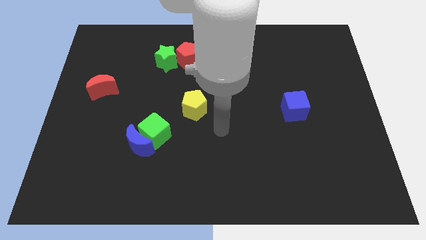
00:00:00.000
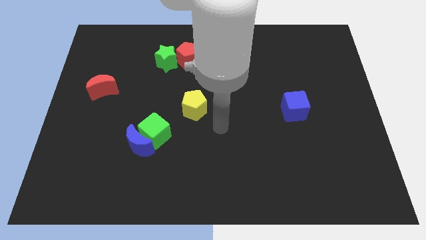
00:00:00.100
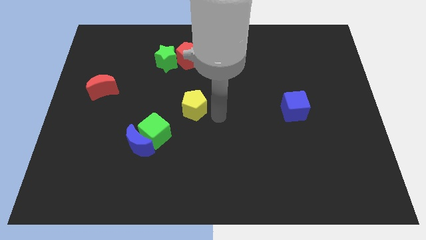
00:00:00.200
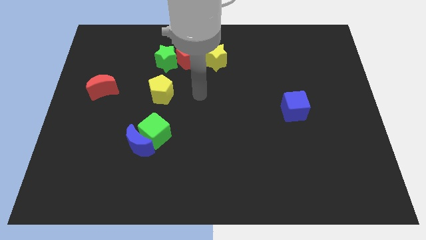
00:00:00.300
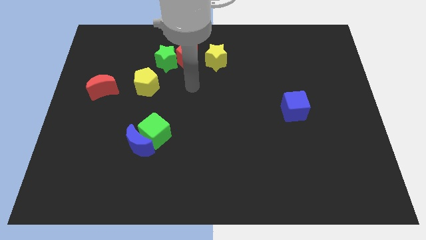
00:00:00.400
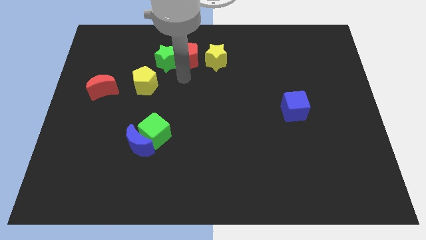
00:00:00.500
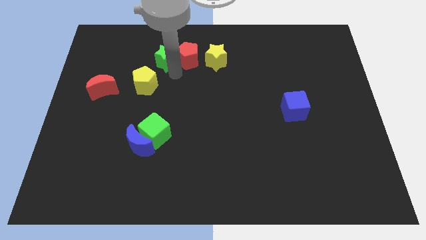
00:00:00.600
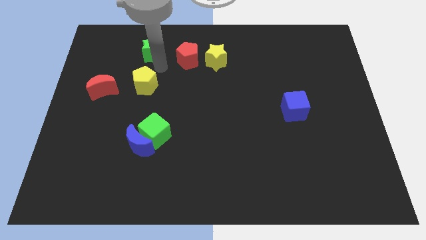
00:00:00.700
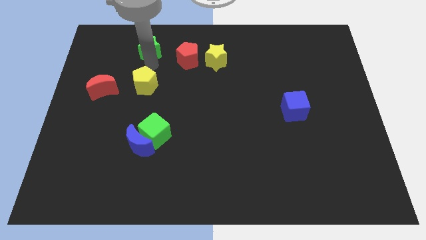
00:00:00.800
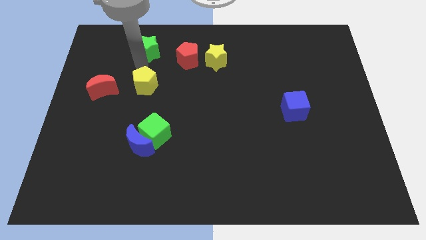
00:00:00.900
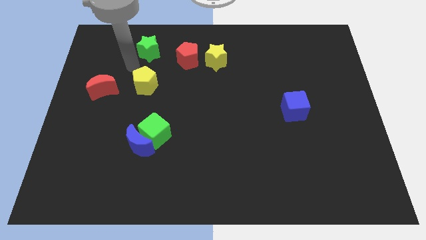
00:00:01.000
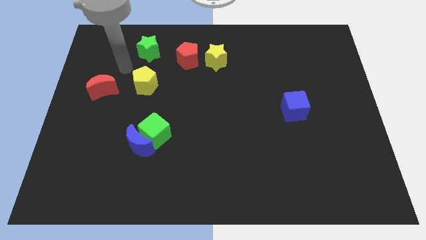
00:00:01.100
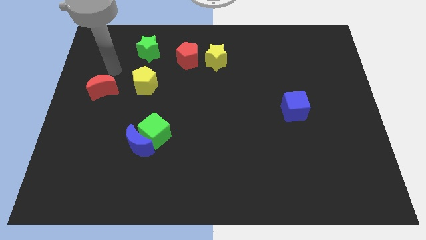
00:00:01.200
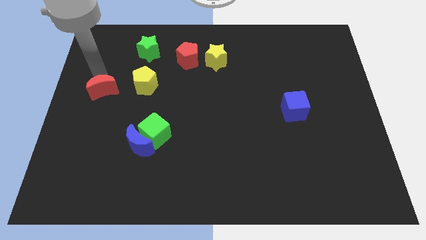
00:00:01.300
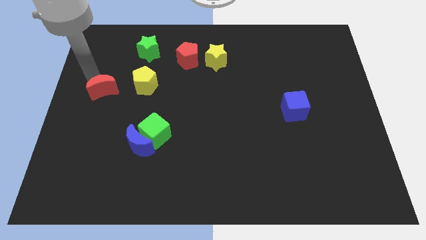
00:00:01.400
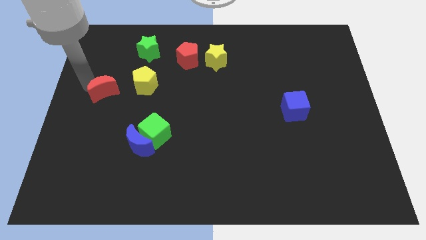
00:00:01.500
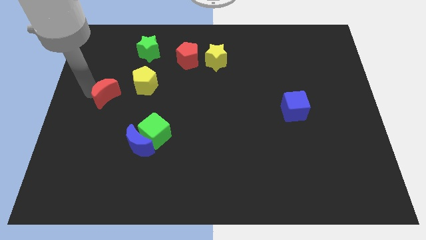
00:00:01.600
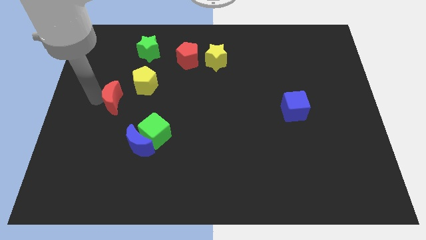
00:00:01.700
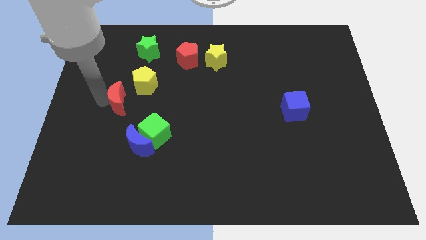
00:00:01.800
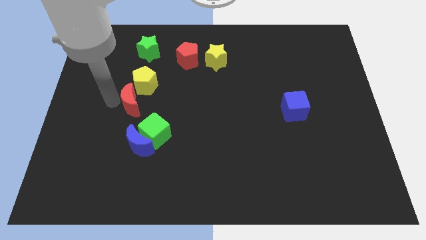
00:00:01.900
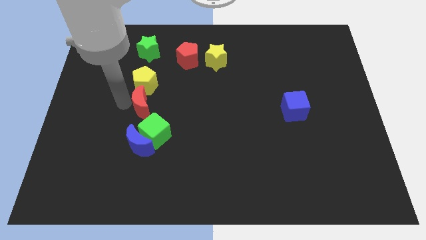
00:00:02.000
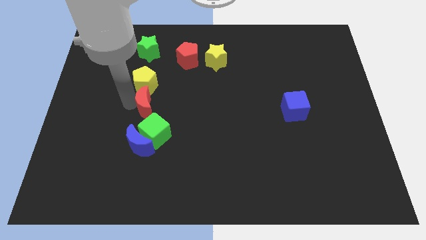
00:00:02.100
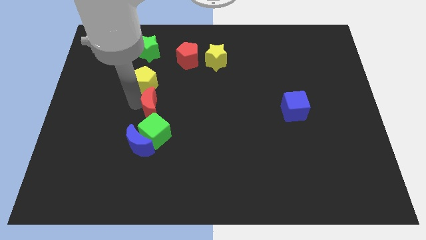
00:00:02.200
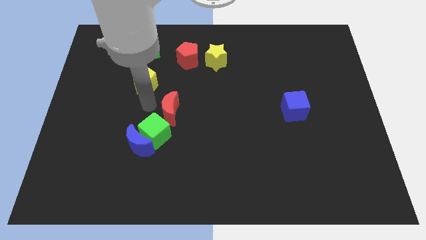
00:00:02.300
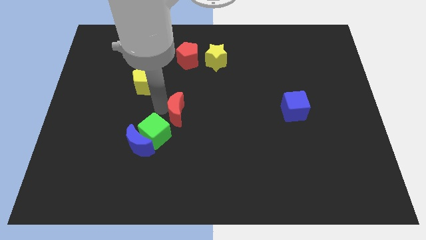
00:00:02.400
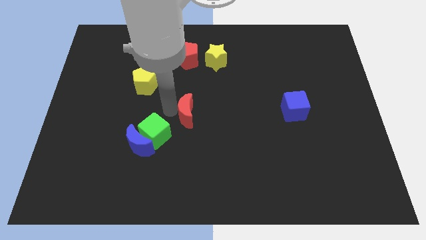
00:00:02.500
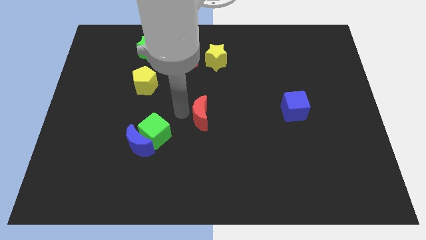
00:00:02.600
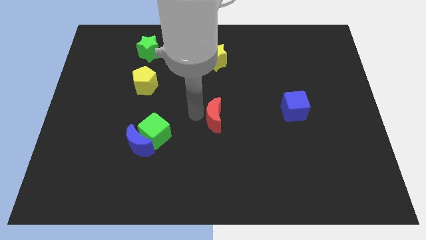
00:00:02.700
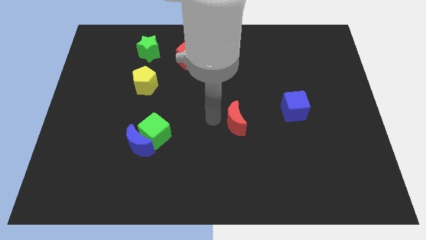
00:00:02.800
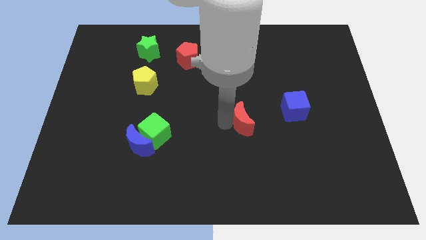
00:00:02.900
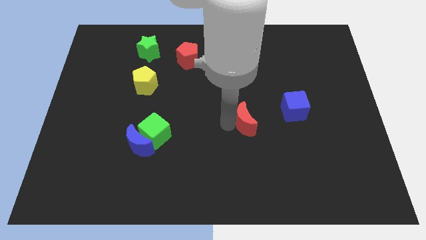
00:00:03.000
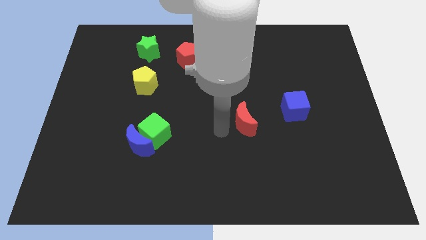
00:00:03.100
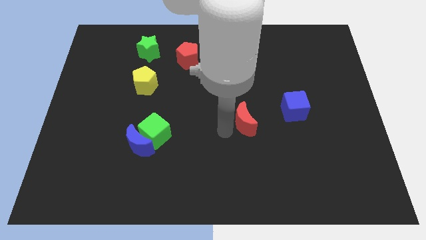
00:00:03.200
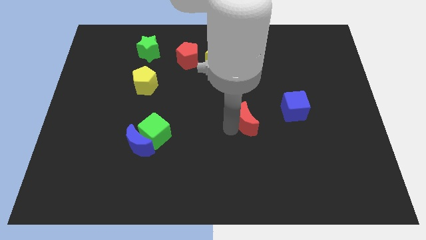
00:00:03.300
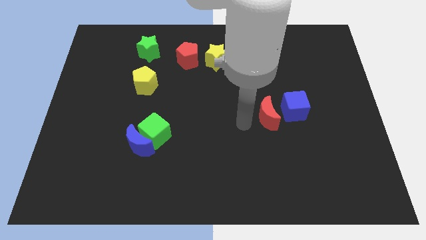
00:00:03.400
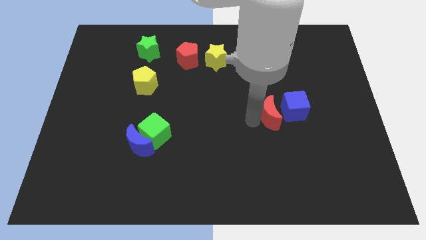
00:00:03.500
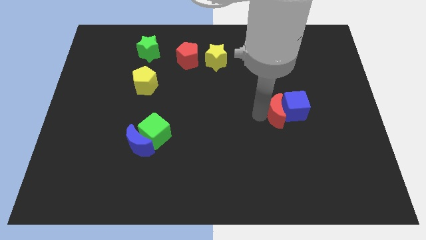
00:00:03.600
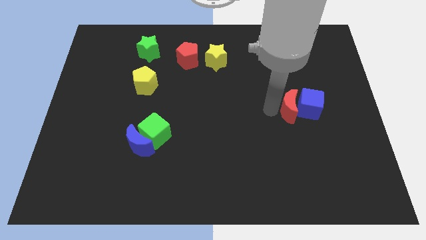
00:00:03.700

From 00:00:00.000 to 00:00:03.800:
slide the red moon next to the blue cube

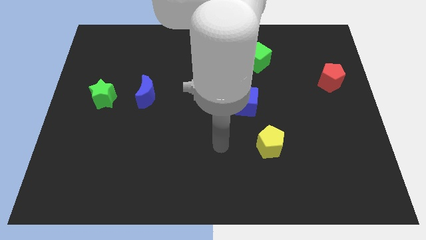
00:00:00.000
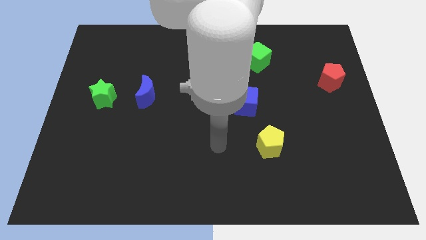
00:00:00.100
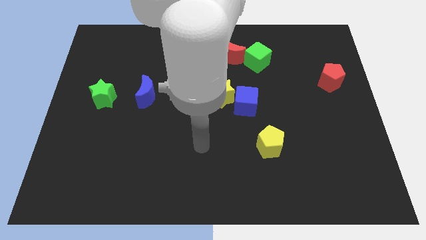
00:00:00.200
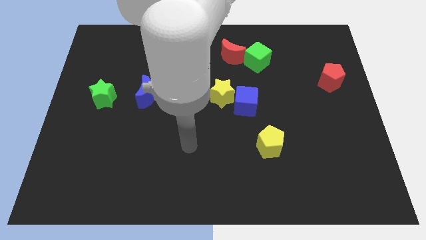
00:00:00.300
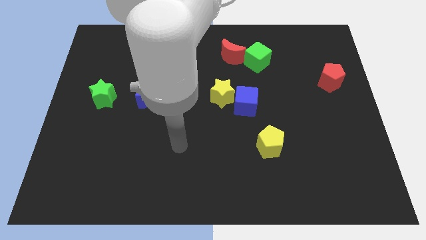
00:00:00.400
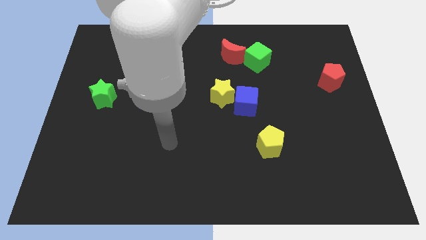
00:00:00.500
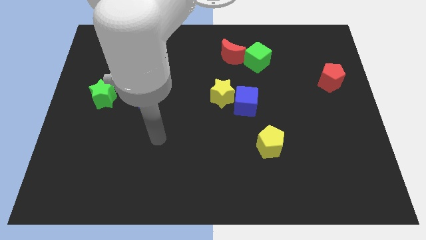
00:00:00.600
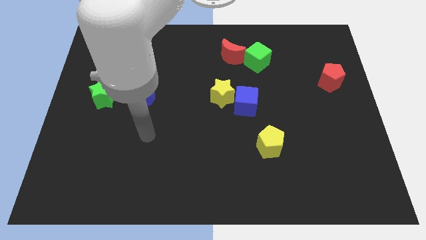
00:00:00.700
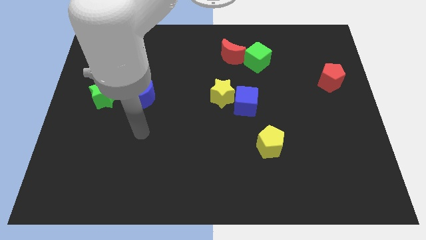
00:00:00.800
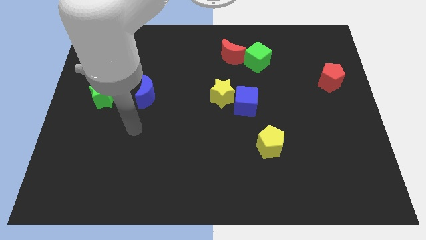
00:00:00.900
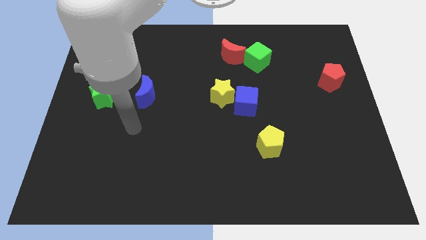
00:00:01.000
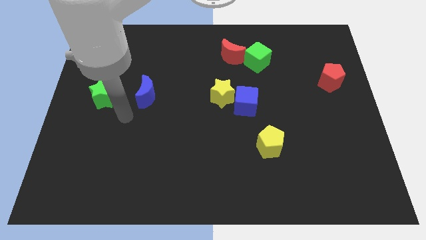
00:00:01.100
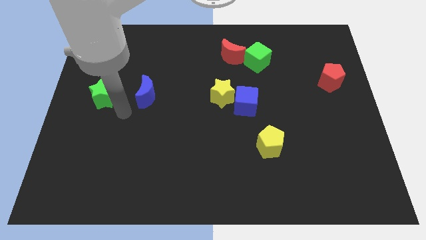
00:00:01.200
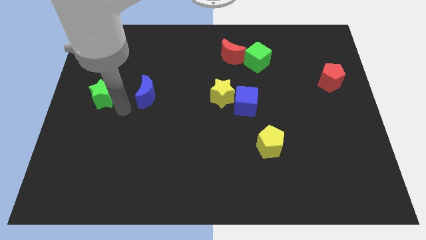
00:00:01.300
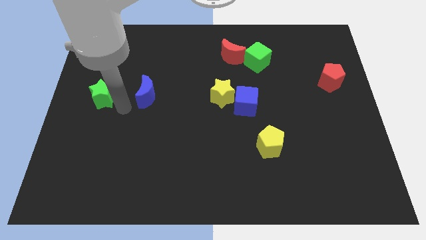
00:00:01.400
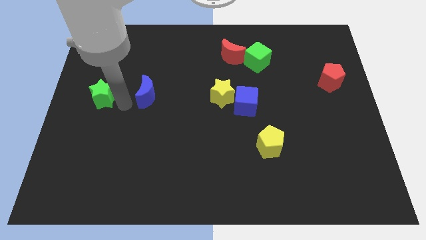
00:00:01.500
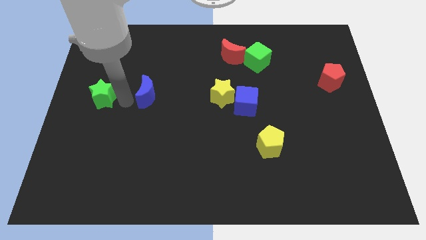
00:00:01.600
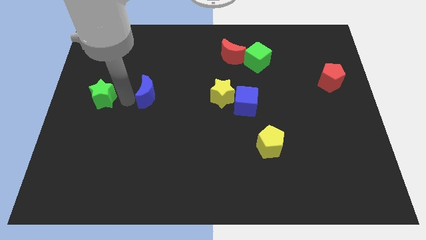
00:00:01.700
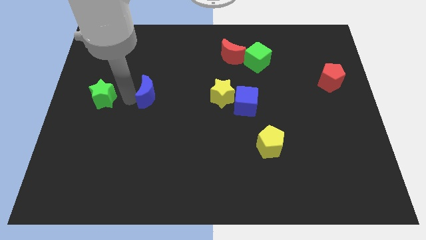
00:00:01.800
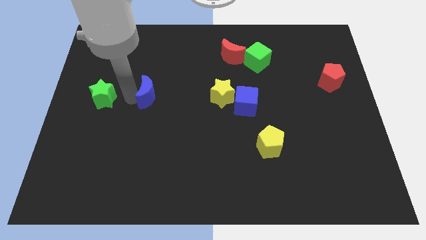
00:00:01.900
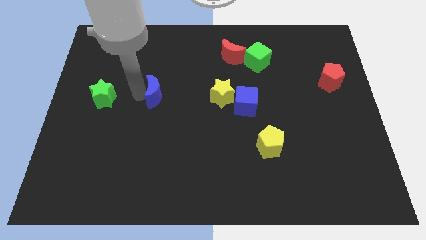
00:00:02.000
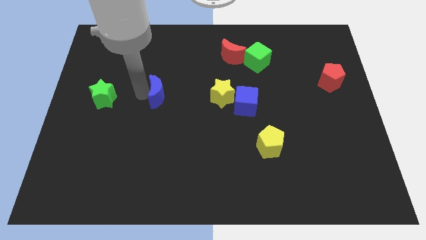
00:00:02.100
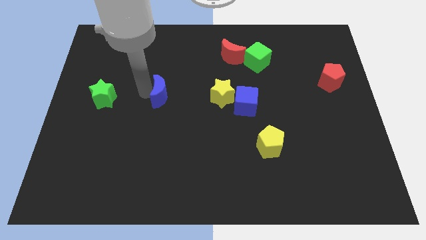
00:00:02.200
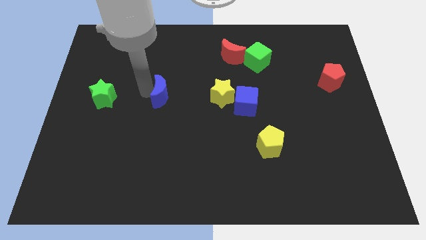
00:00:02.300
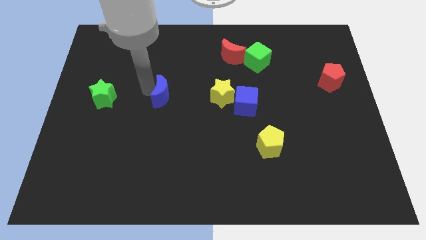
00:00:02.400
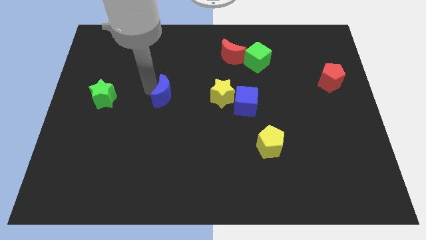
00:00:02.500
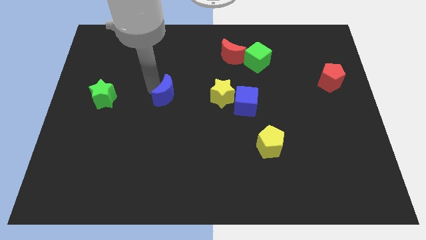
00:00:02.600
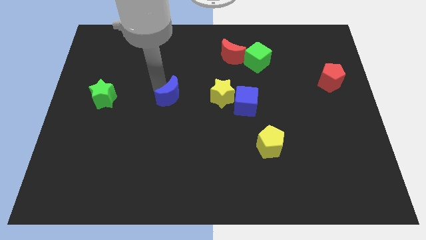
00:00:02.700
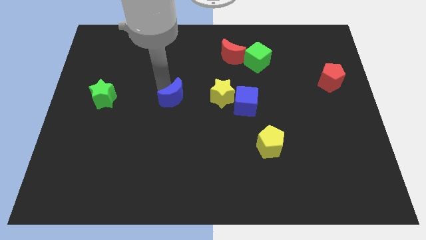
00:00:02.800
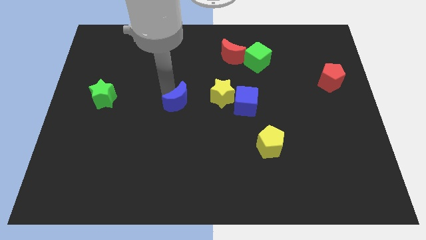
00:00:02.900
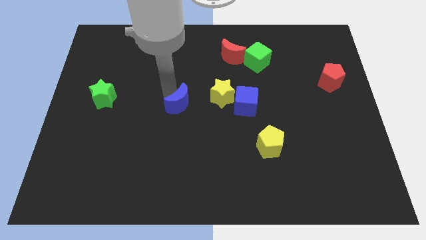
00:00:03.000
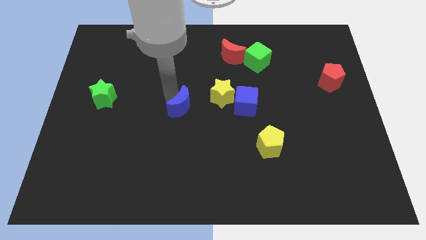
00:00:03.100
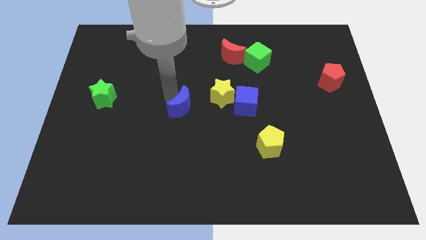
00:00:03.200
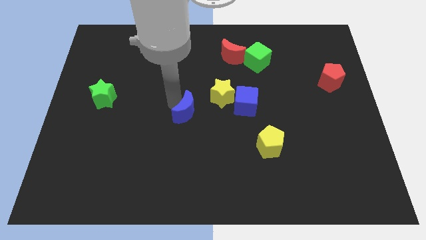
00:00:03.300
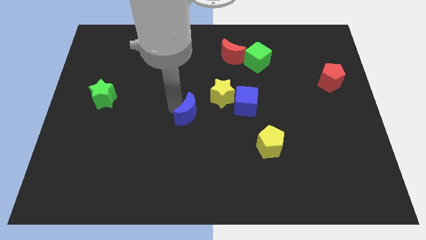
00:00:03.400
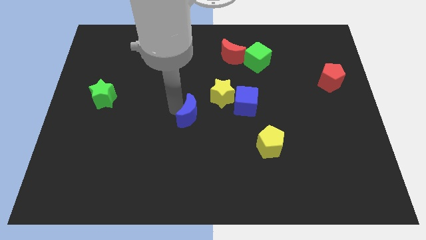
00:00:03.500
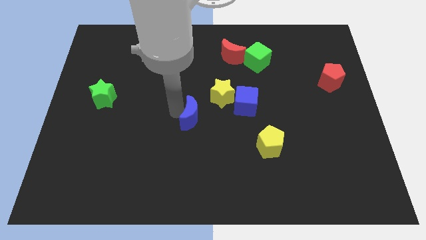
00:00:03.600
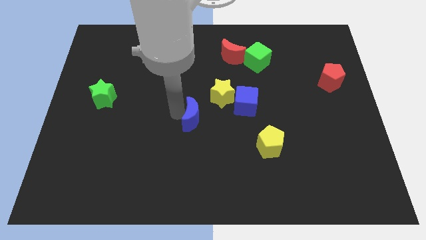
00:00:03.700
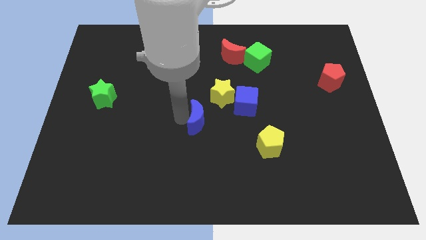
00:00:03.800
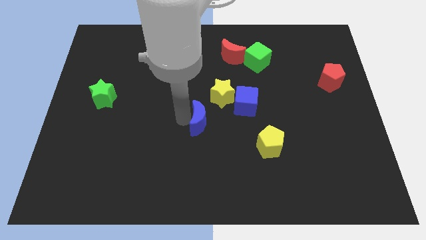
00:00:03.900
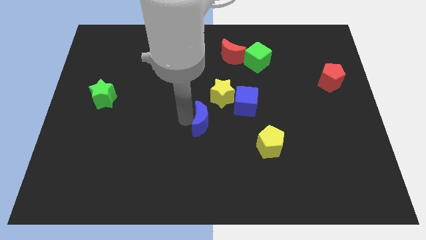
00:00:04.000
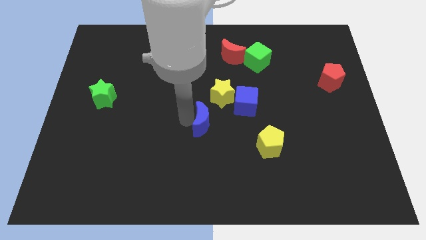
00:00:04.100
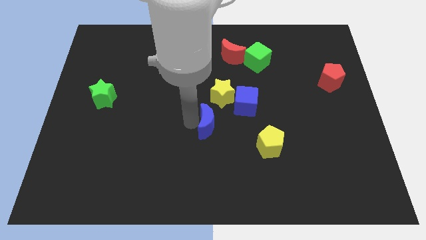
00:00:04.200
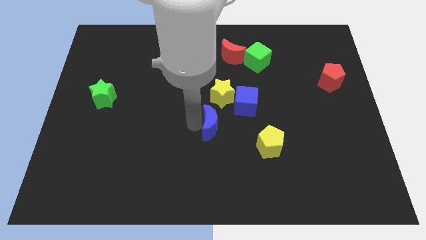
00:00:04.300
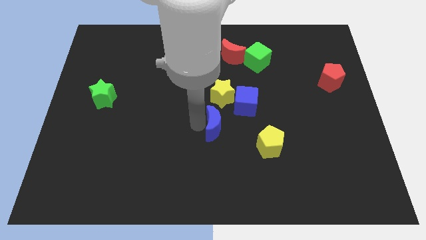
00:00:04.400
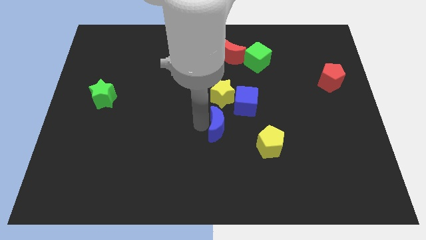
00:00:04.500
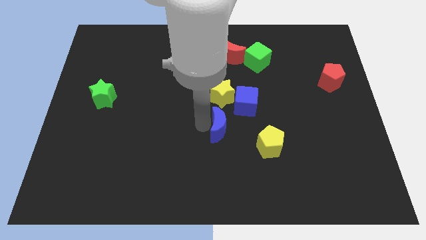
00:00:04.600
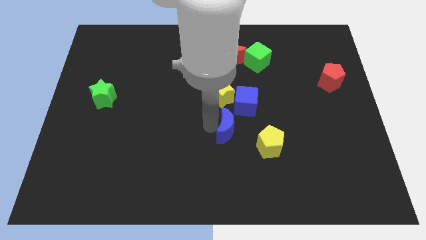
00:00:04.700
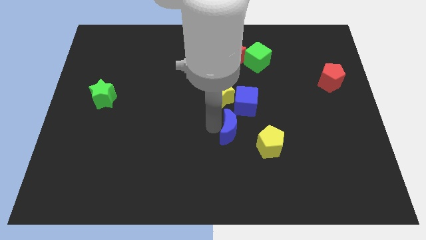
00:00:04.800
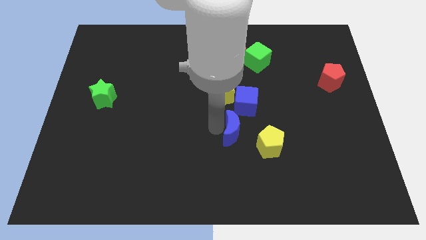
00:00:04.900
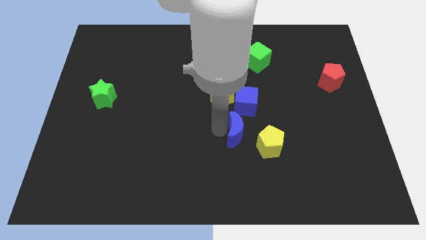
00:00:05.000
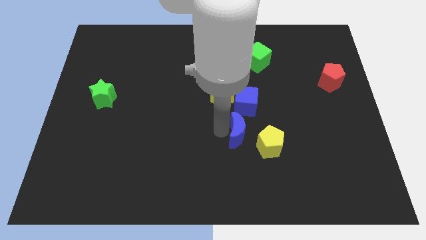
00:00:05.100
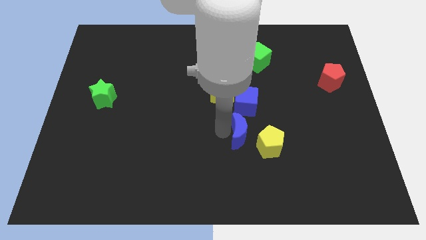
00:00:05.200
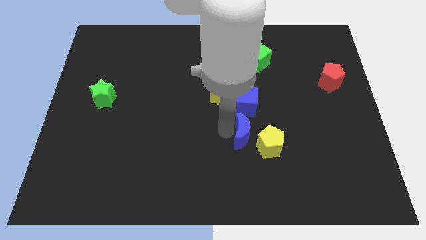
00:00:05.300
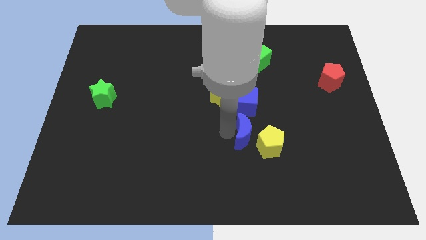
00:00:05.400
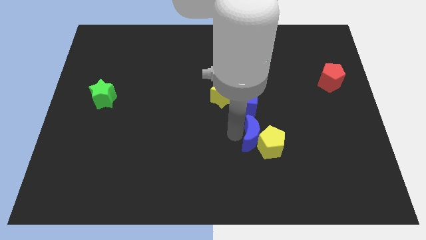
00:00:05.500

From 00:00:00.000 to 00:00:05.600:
push the blue moon close to the yellow pentagon
